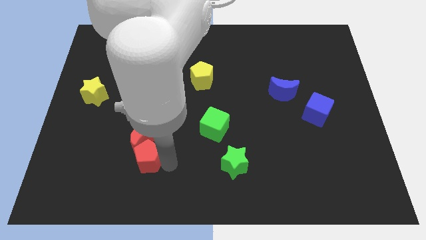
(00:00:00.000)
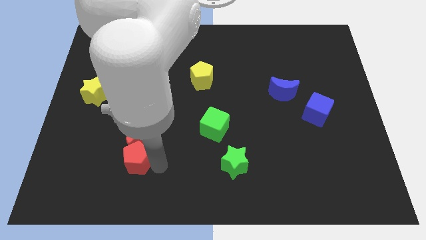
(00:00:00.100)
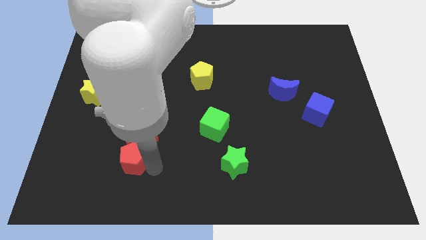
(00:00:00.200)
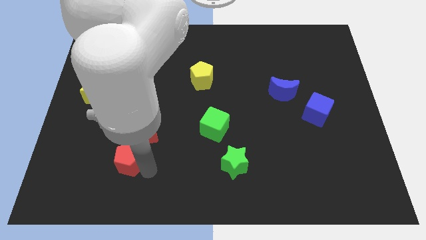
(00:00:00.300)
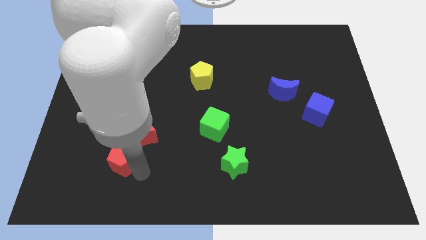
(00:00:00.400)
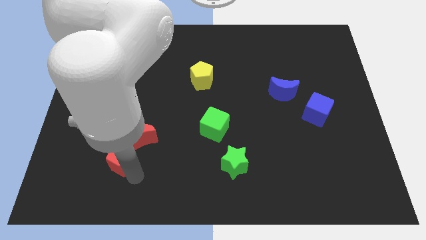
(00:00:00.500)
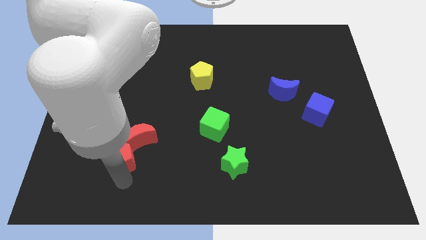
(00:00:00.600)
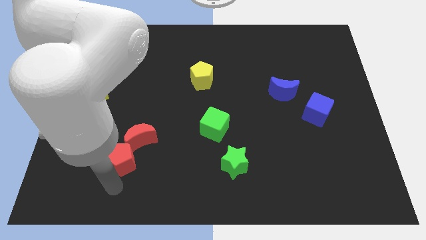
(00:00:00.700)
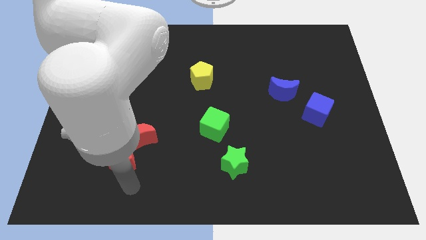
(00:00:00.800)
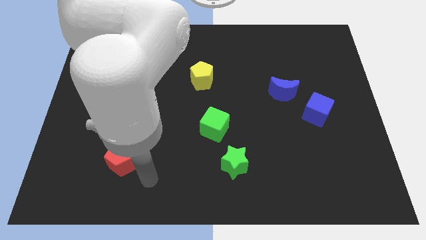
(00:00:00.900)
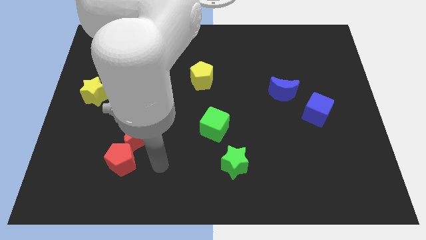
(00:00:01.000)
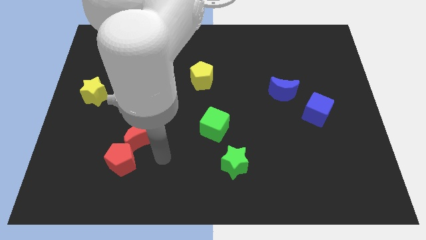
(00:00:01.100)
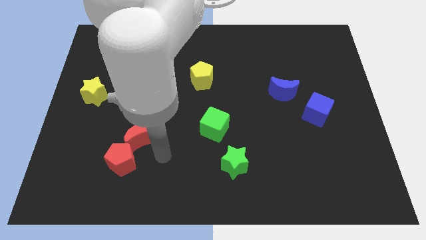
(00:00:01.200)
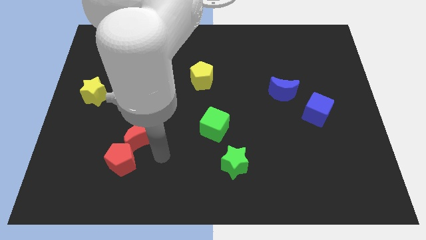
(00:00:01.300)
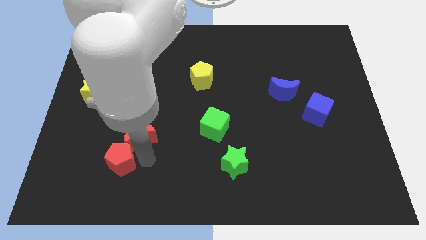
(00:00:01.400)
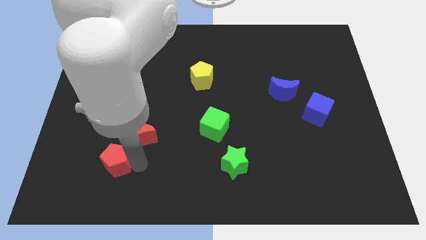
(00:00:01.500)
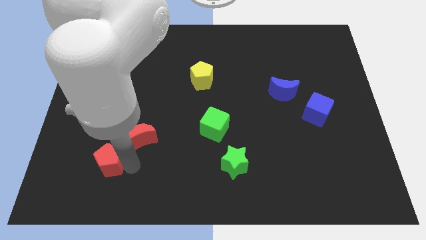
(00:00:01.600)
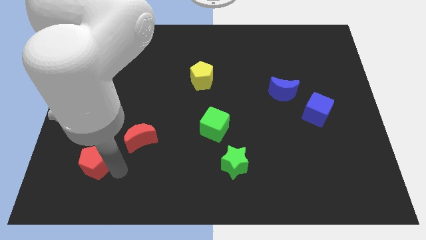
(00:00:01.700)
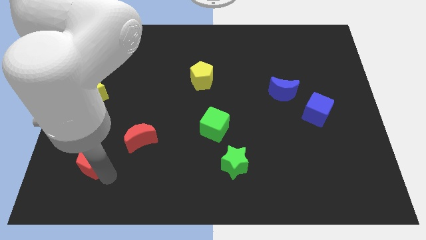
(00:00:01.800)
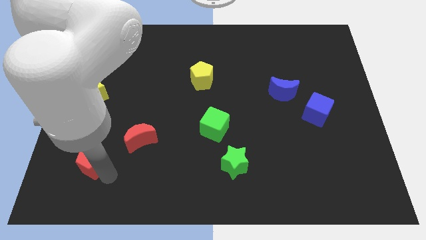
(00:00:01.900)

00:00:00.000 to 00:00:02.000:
separate the red pentagon from the red crescent

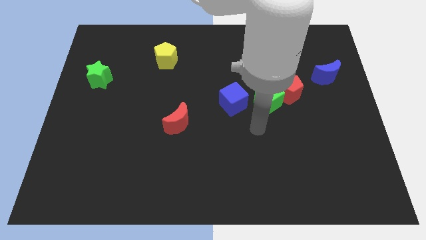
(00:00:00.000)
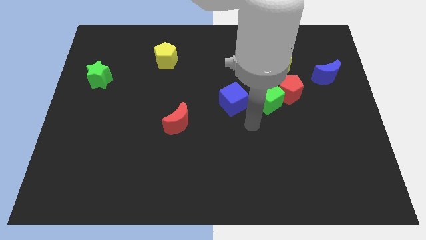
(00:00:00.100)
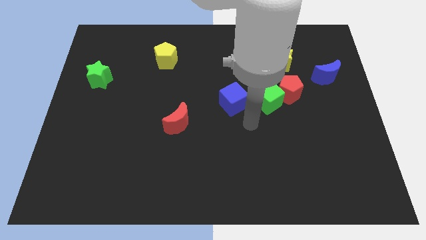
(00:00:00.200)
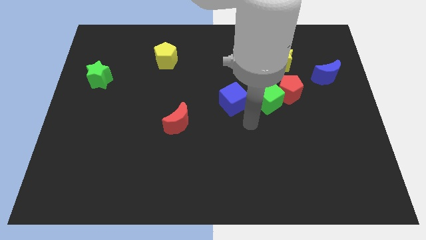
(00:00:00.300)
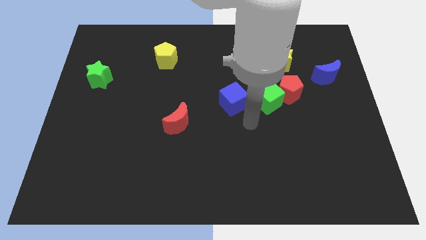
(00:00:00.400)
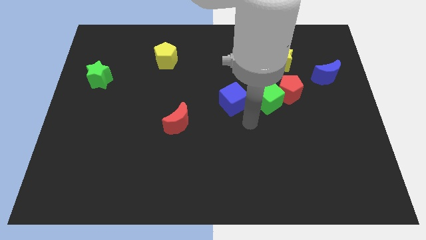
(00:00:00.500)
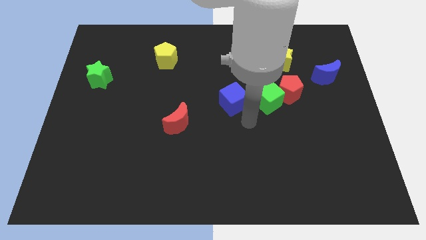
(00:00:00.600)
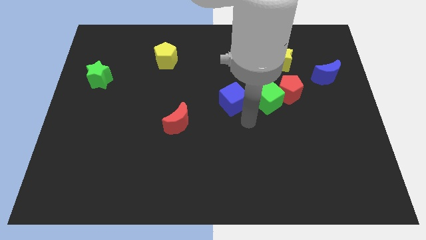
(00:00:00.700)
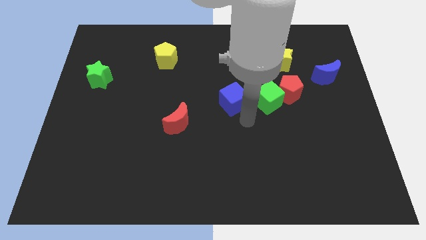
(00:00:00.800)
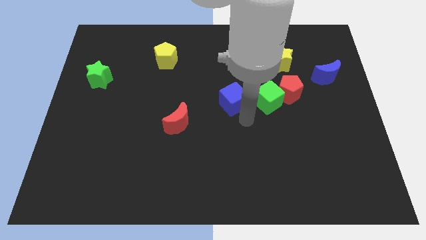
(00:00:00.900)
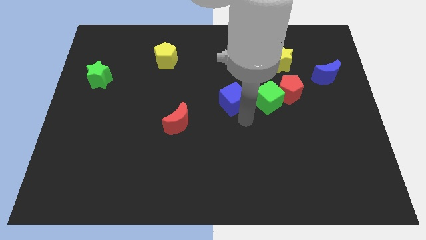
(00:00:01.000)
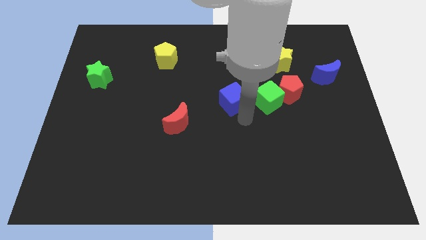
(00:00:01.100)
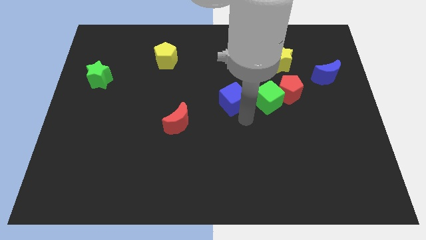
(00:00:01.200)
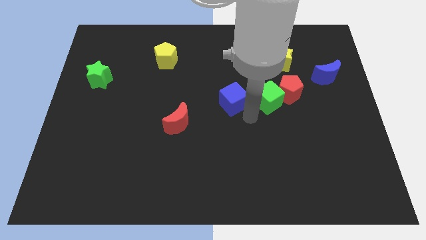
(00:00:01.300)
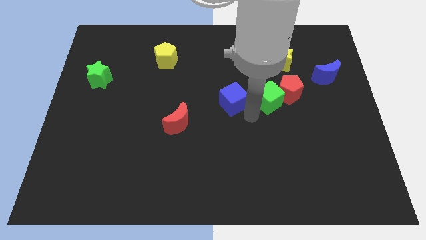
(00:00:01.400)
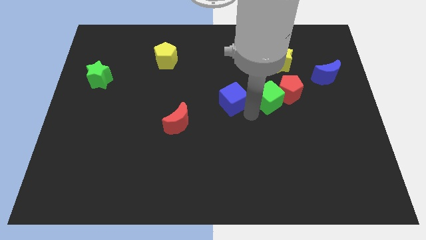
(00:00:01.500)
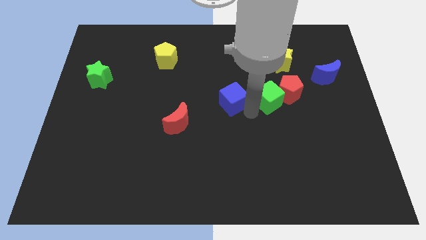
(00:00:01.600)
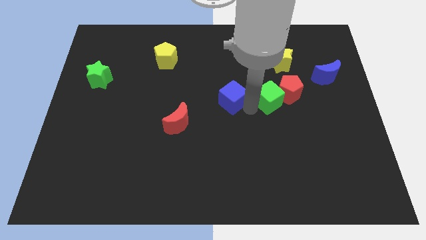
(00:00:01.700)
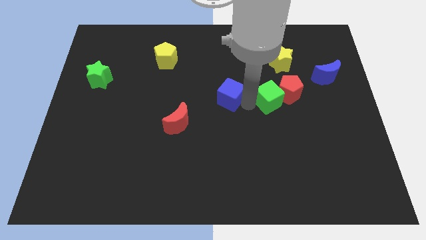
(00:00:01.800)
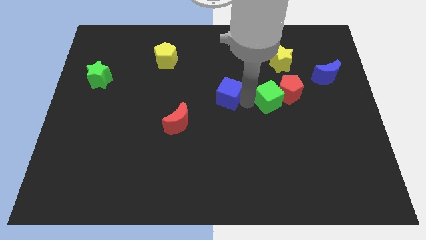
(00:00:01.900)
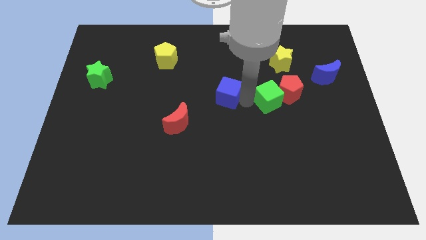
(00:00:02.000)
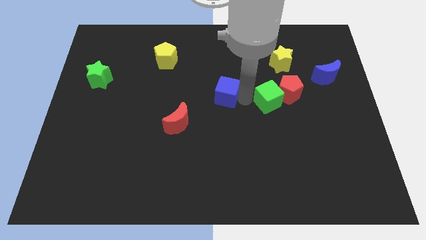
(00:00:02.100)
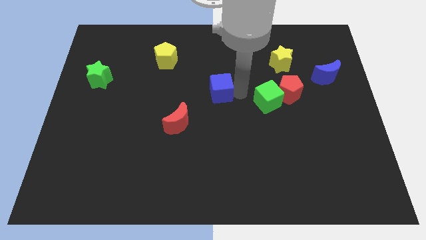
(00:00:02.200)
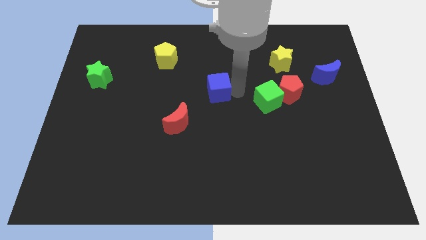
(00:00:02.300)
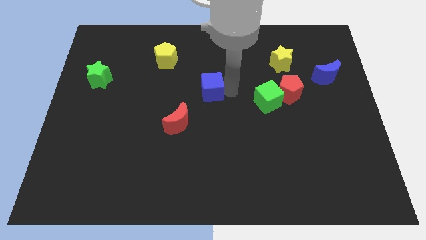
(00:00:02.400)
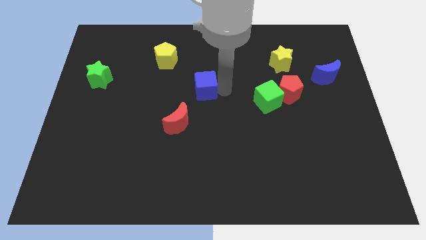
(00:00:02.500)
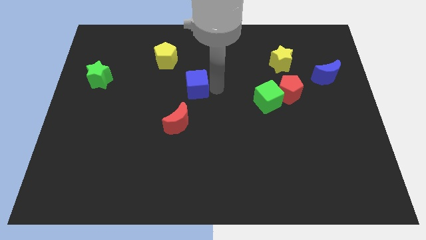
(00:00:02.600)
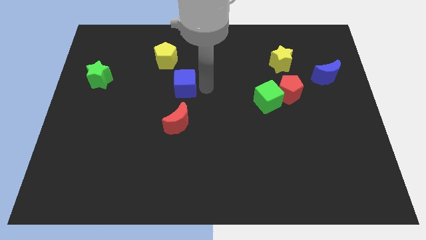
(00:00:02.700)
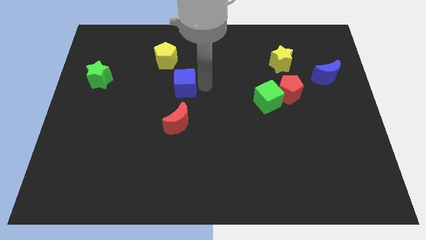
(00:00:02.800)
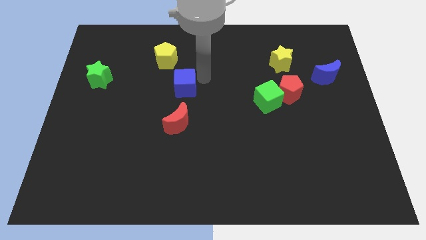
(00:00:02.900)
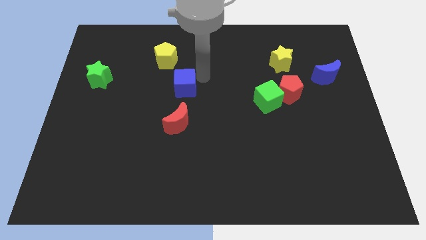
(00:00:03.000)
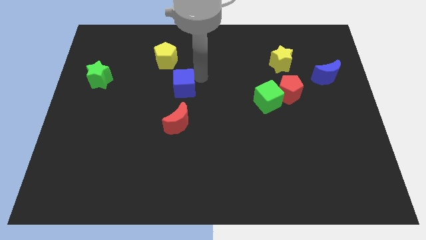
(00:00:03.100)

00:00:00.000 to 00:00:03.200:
move the blue block towards the bottom right of the yellow pentagon

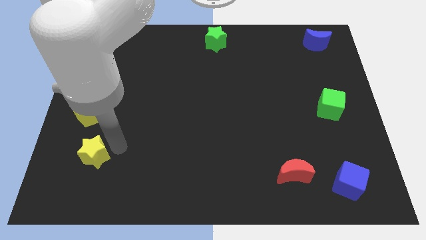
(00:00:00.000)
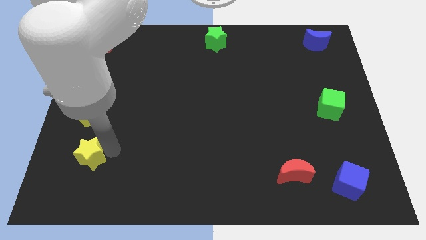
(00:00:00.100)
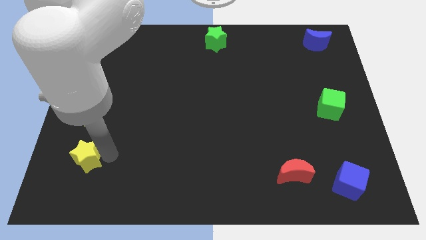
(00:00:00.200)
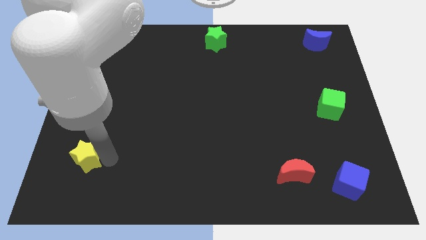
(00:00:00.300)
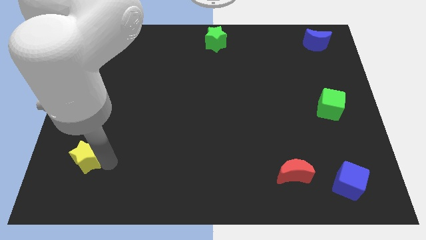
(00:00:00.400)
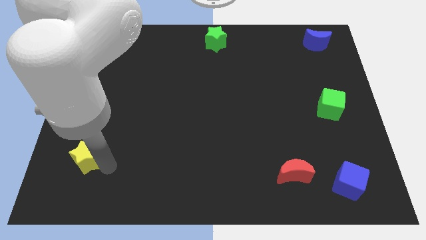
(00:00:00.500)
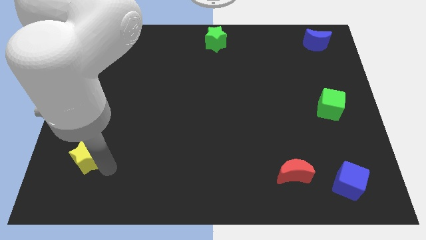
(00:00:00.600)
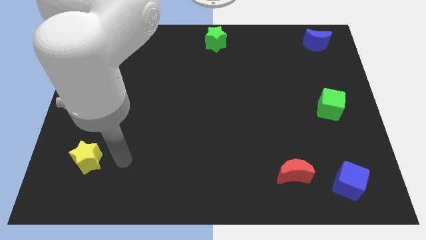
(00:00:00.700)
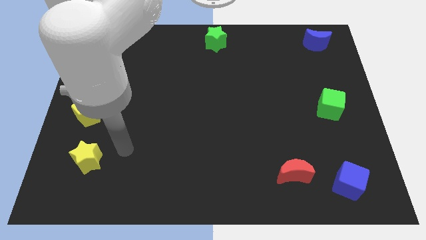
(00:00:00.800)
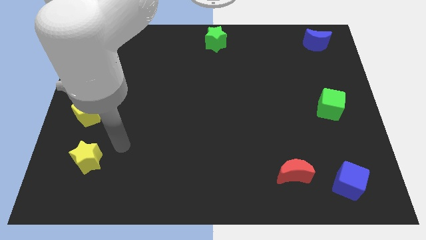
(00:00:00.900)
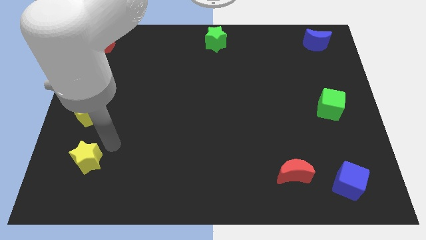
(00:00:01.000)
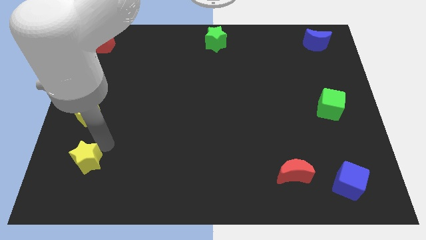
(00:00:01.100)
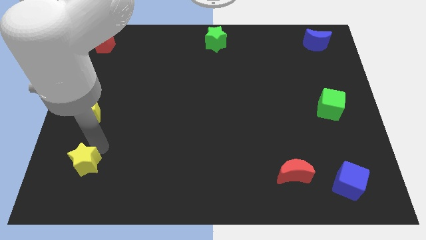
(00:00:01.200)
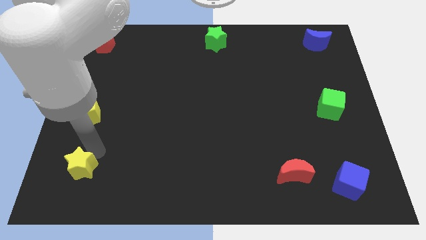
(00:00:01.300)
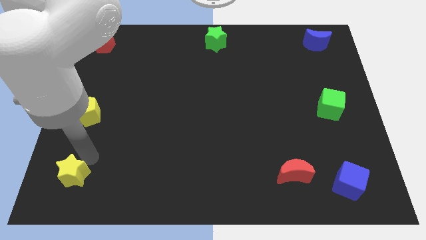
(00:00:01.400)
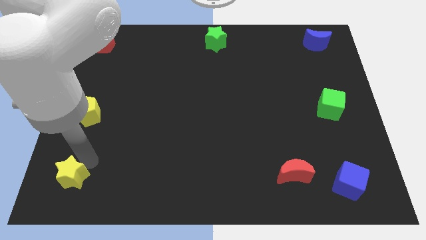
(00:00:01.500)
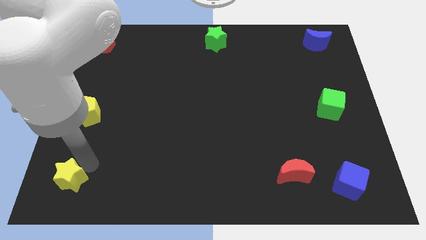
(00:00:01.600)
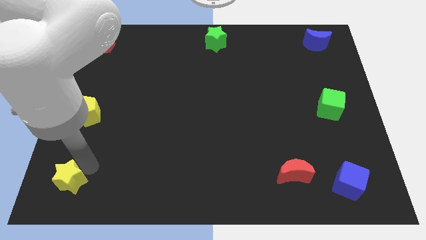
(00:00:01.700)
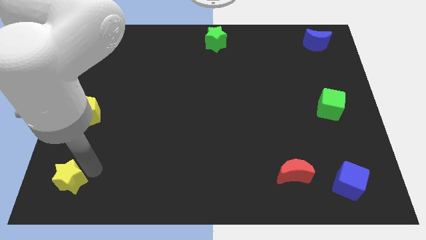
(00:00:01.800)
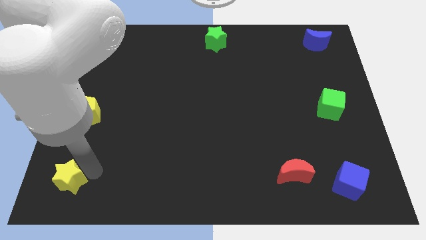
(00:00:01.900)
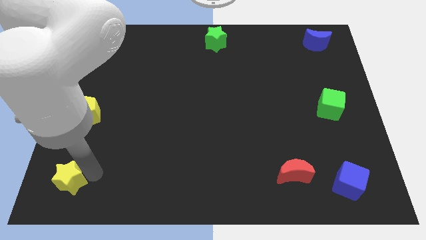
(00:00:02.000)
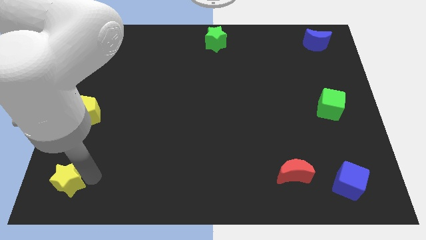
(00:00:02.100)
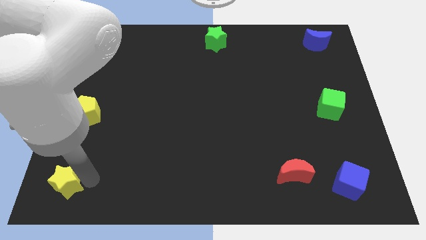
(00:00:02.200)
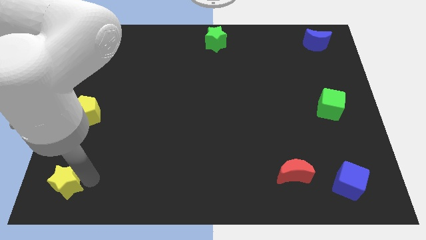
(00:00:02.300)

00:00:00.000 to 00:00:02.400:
place the yellow star at the bottom left side

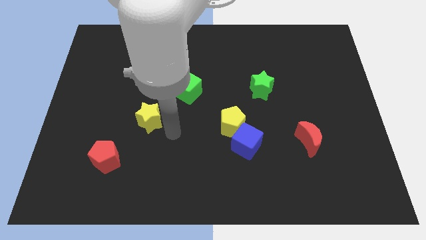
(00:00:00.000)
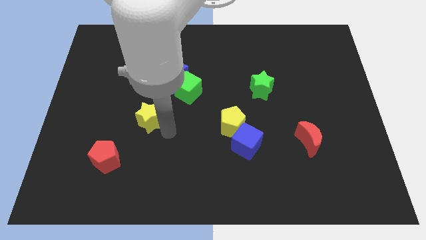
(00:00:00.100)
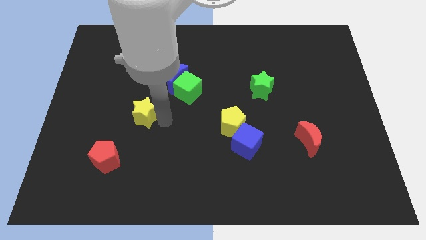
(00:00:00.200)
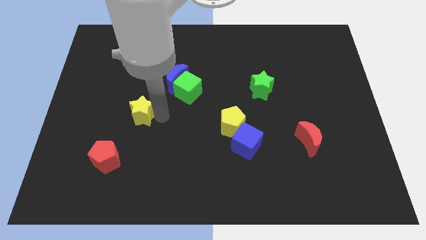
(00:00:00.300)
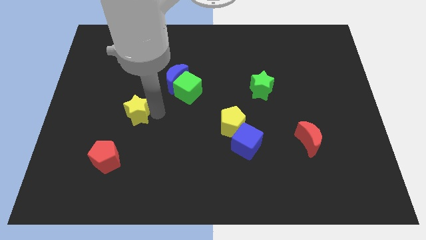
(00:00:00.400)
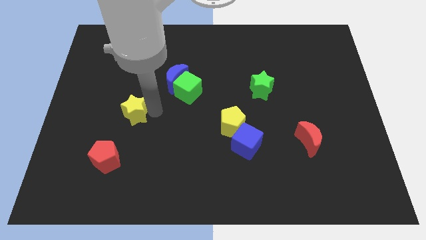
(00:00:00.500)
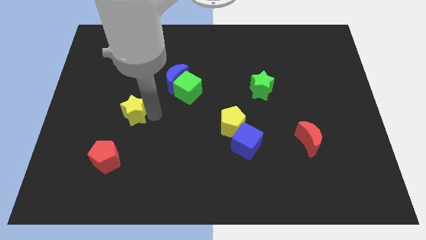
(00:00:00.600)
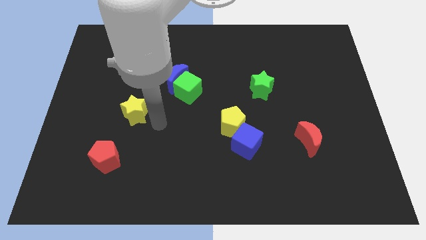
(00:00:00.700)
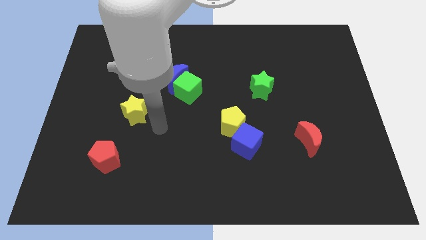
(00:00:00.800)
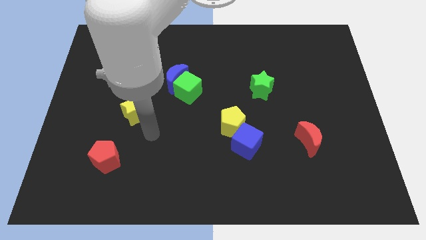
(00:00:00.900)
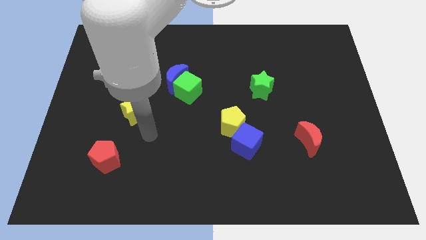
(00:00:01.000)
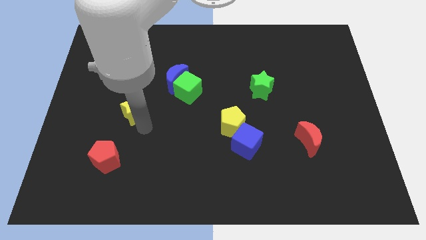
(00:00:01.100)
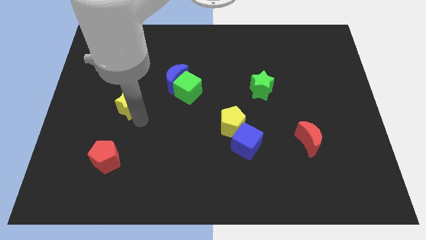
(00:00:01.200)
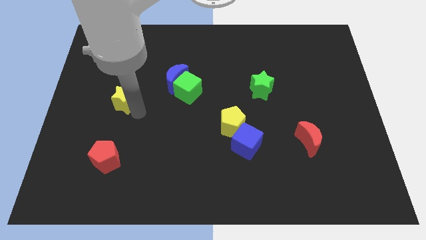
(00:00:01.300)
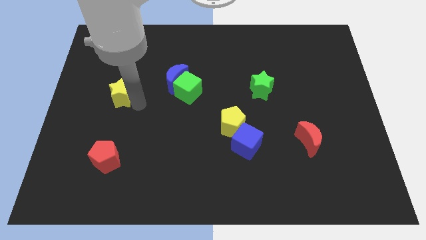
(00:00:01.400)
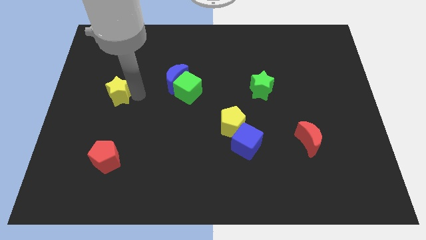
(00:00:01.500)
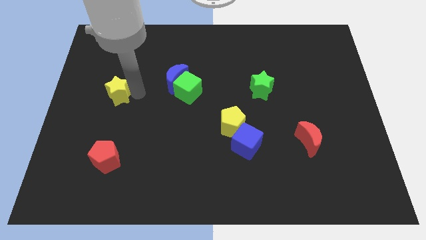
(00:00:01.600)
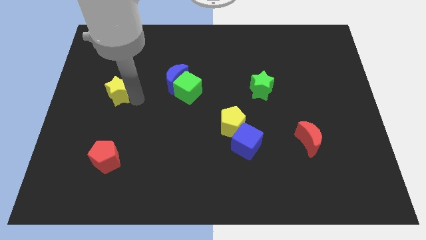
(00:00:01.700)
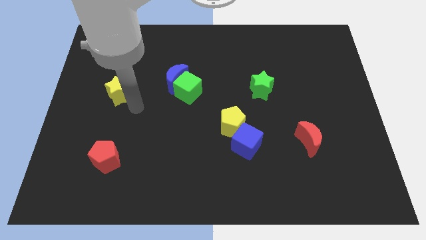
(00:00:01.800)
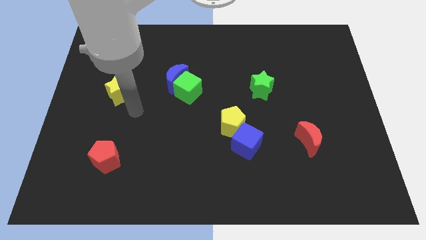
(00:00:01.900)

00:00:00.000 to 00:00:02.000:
place the yellow star to the left of the blue moon
